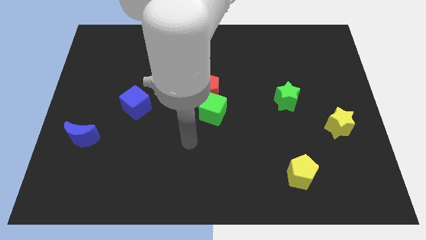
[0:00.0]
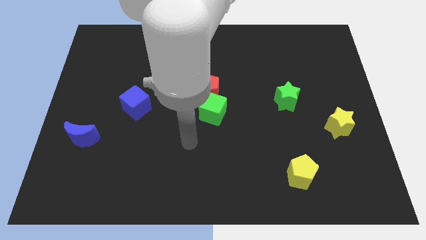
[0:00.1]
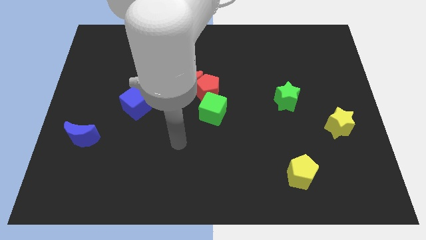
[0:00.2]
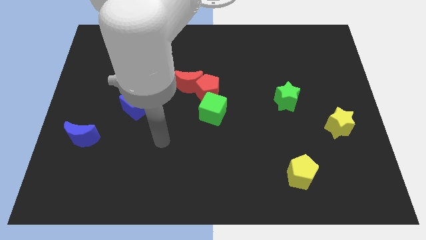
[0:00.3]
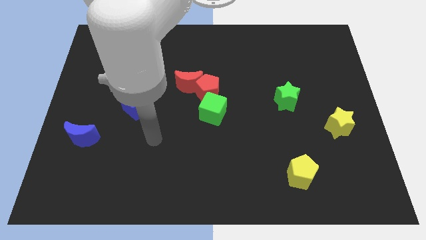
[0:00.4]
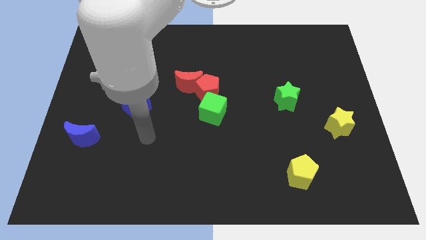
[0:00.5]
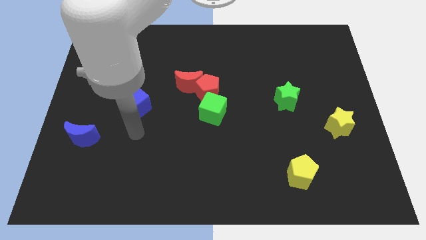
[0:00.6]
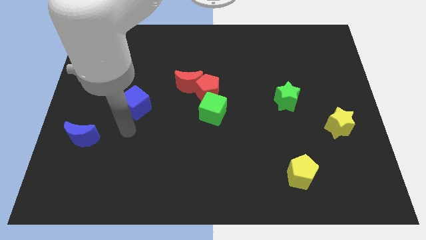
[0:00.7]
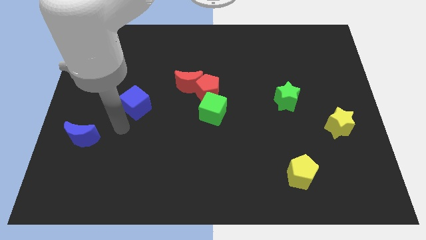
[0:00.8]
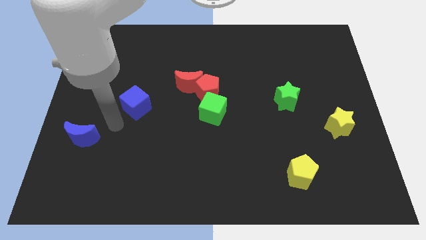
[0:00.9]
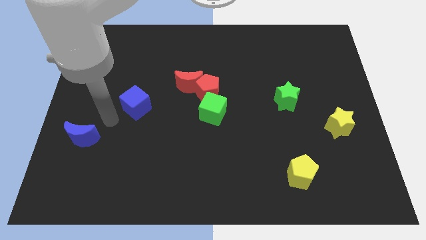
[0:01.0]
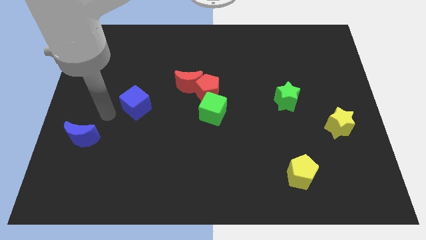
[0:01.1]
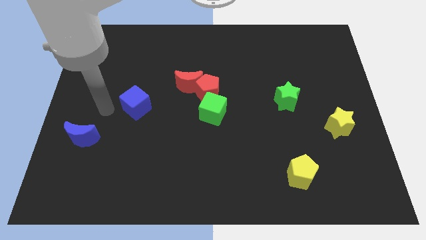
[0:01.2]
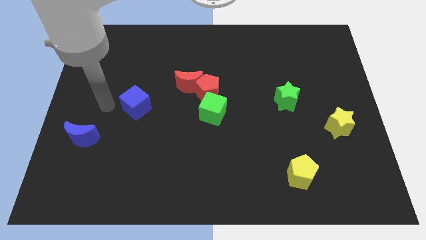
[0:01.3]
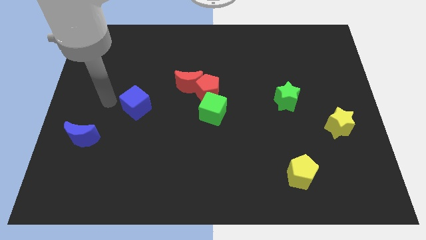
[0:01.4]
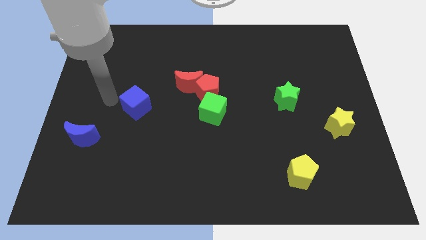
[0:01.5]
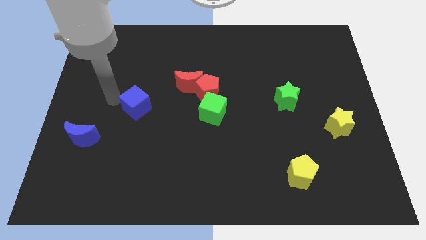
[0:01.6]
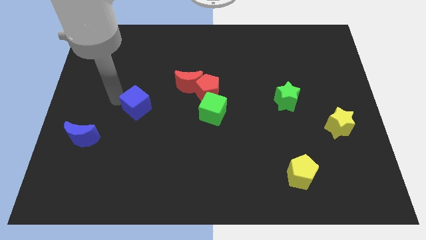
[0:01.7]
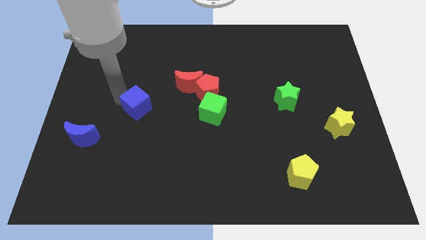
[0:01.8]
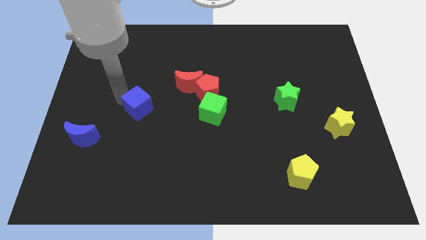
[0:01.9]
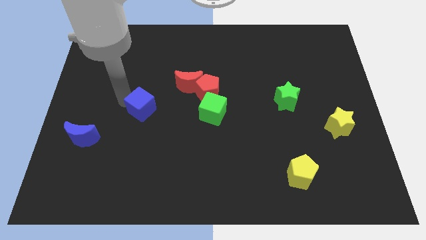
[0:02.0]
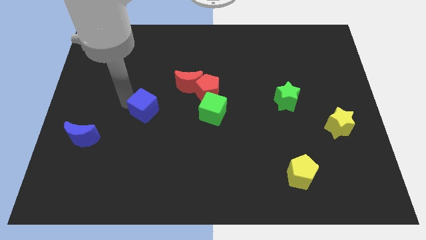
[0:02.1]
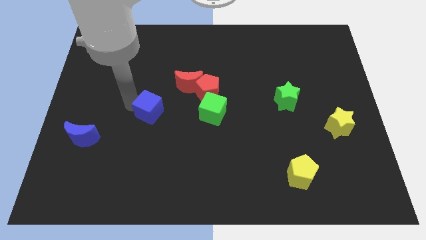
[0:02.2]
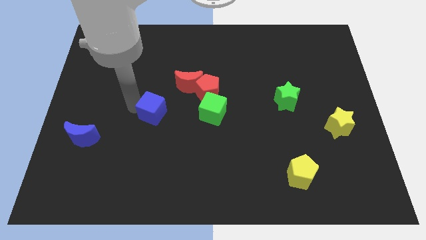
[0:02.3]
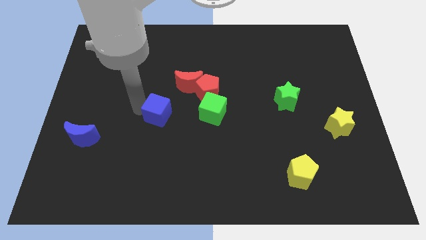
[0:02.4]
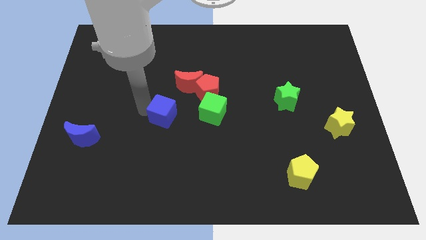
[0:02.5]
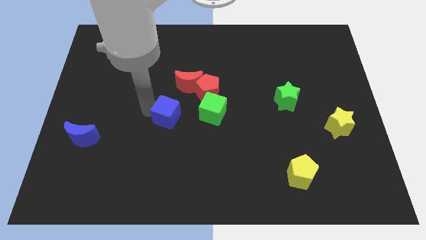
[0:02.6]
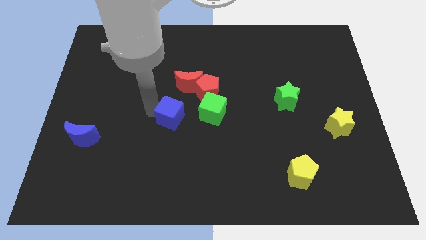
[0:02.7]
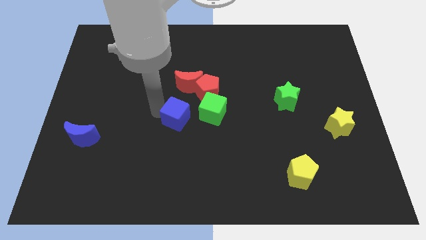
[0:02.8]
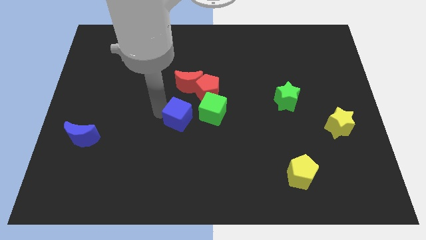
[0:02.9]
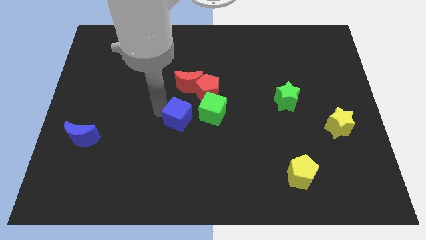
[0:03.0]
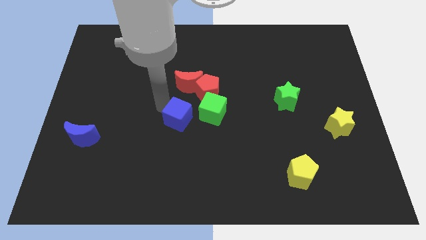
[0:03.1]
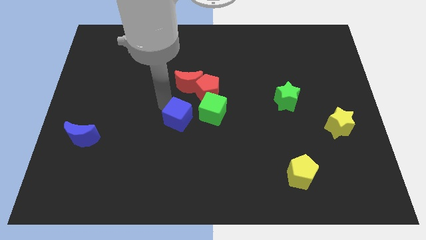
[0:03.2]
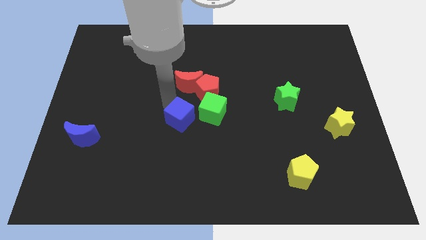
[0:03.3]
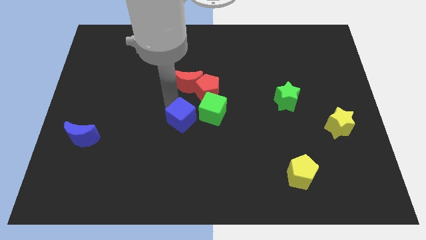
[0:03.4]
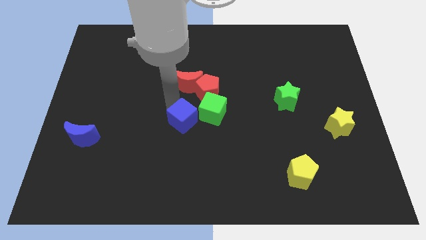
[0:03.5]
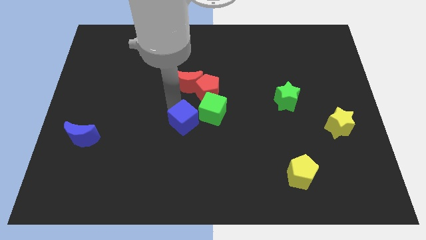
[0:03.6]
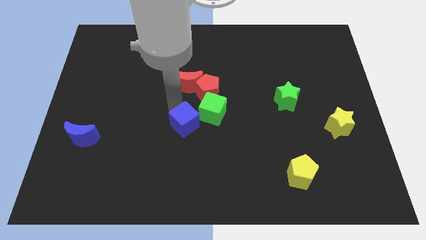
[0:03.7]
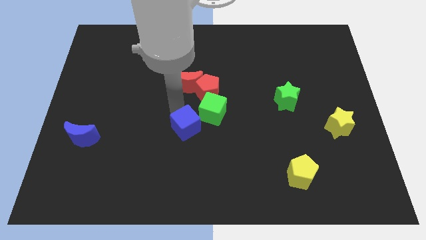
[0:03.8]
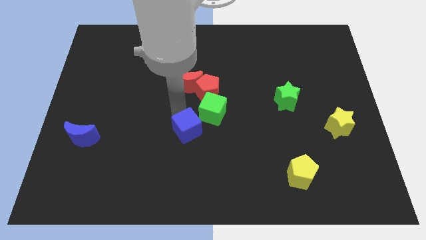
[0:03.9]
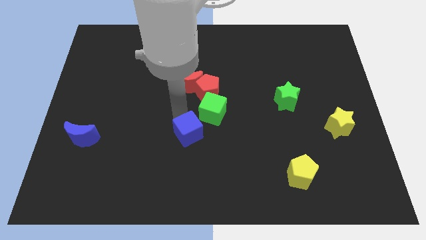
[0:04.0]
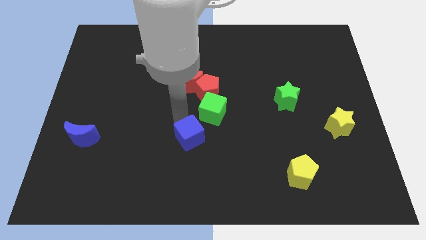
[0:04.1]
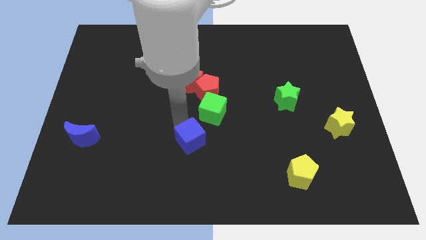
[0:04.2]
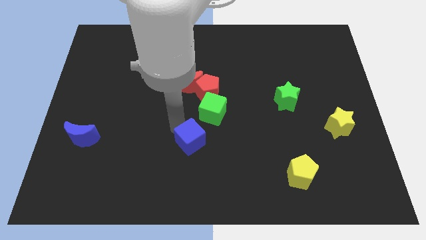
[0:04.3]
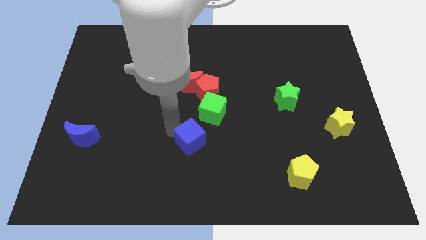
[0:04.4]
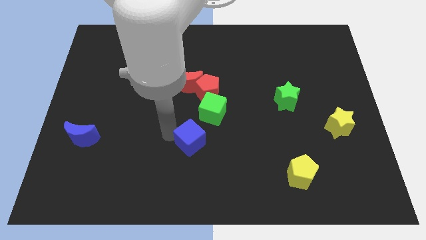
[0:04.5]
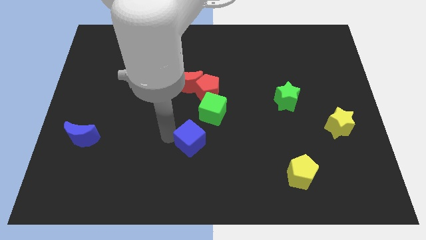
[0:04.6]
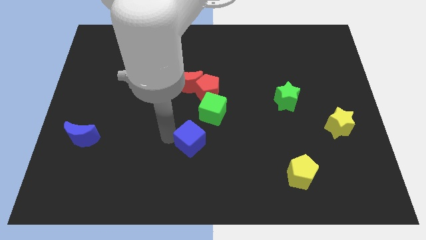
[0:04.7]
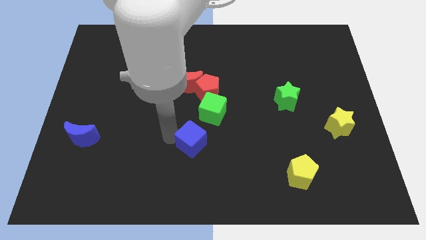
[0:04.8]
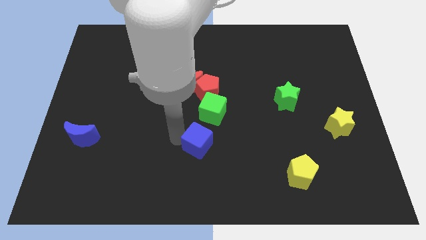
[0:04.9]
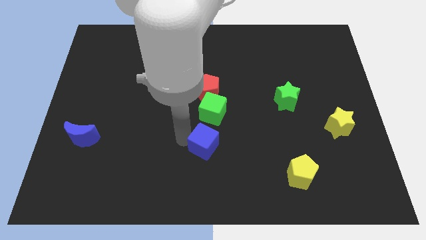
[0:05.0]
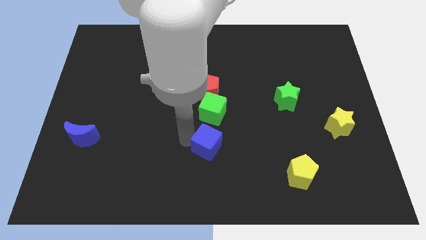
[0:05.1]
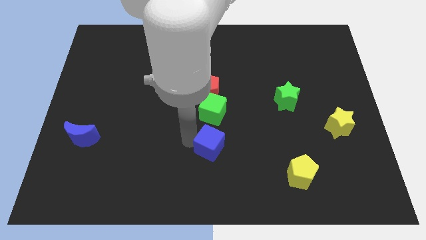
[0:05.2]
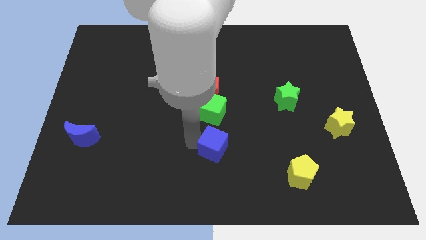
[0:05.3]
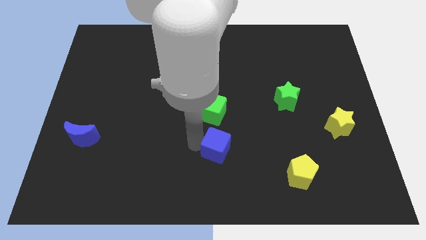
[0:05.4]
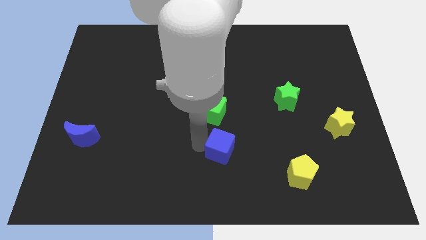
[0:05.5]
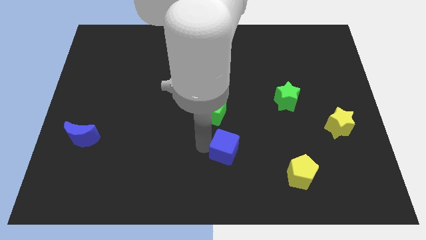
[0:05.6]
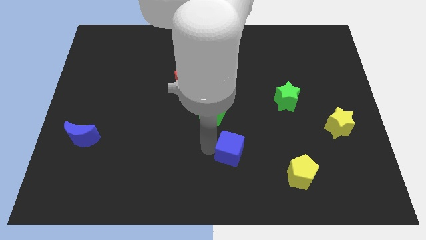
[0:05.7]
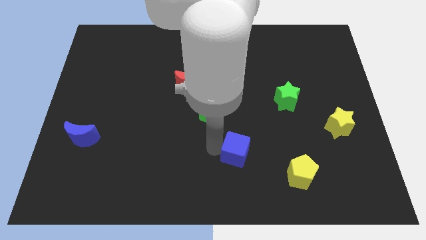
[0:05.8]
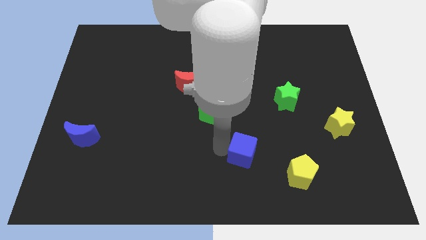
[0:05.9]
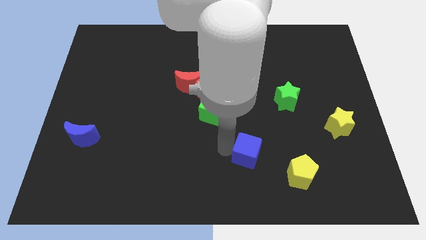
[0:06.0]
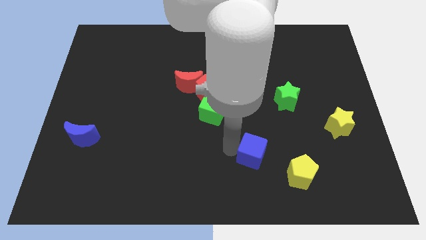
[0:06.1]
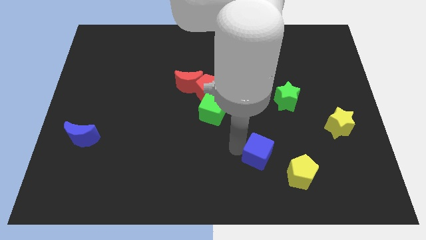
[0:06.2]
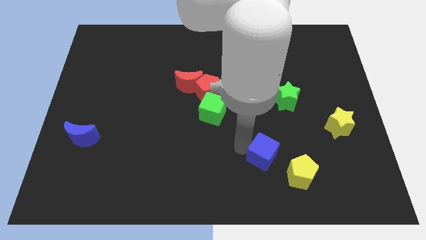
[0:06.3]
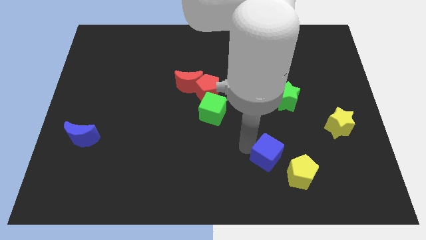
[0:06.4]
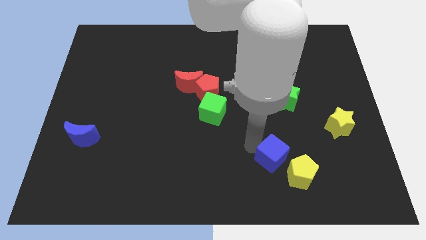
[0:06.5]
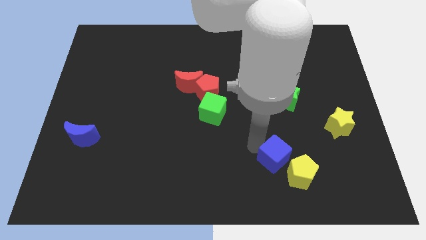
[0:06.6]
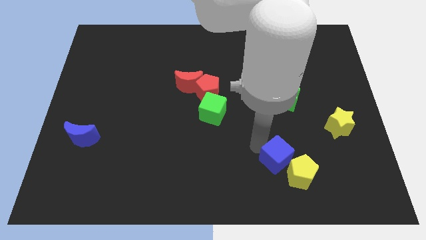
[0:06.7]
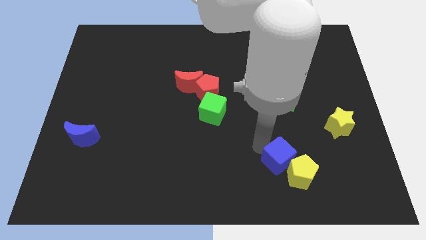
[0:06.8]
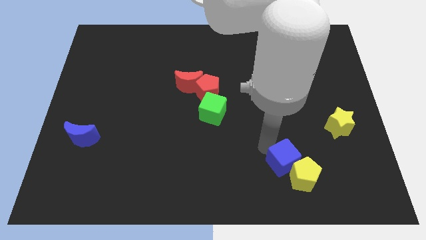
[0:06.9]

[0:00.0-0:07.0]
move the blue cube close to the yellow pentagon

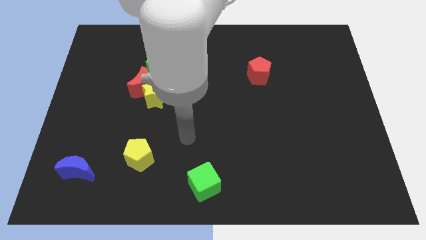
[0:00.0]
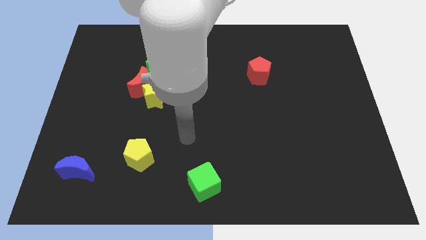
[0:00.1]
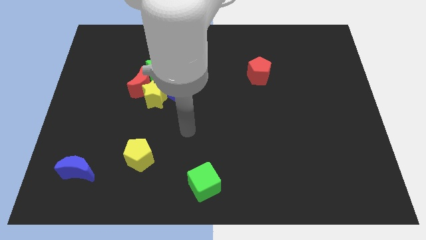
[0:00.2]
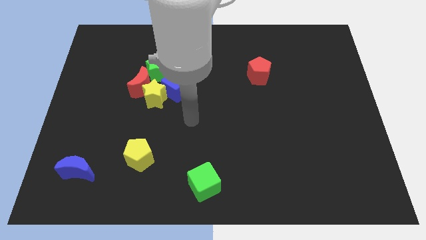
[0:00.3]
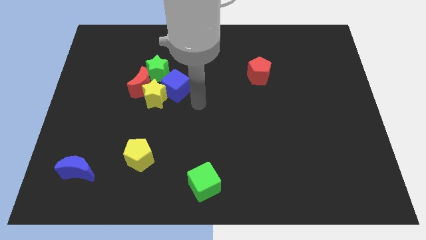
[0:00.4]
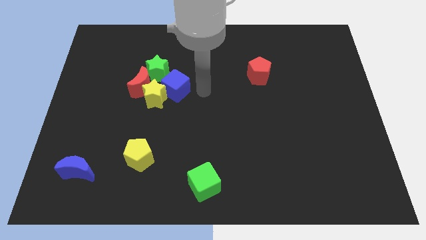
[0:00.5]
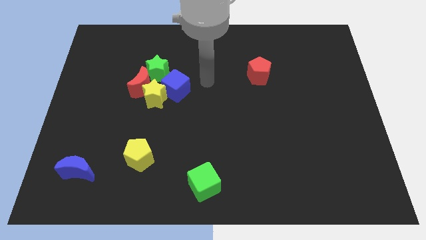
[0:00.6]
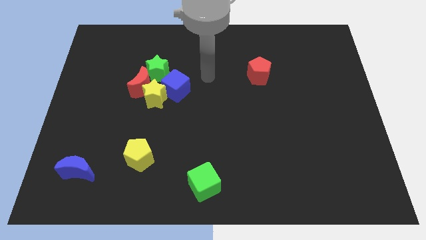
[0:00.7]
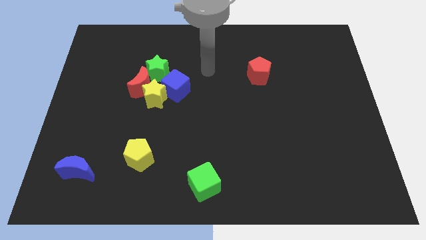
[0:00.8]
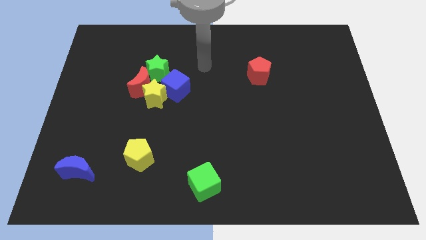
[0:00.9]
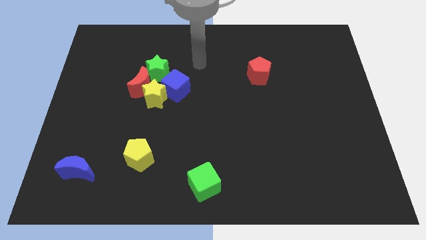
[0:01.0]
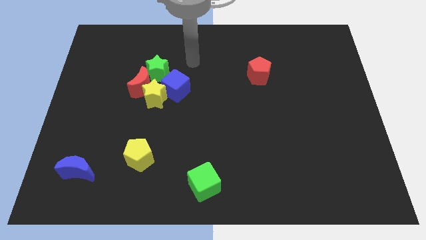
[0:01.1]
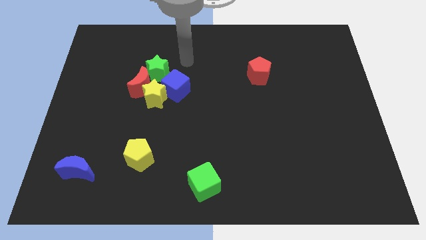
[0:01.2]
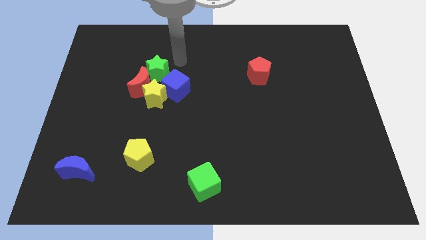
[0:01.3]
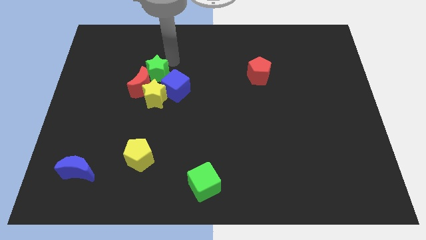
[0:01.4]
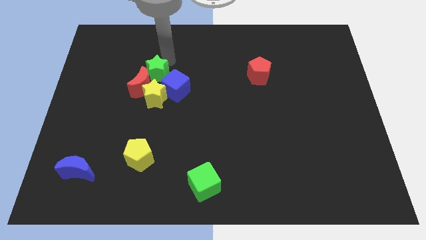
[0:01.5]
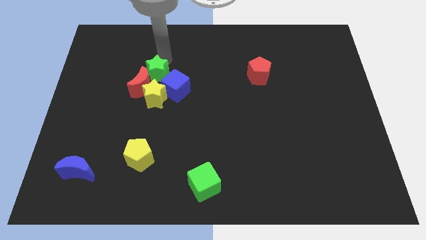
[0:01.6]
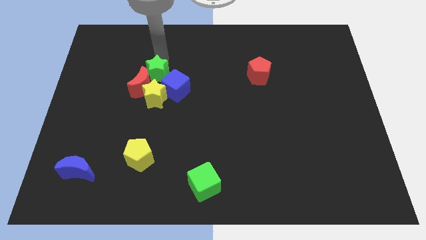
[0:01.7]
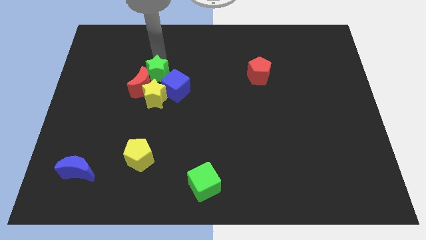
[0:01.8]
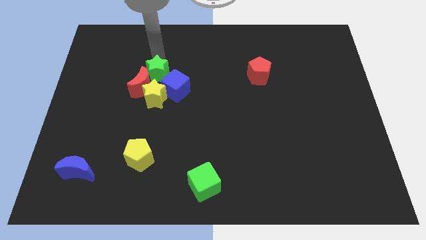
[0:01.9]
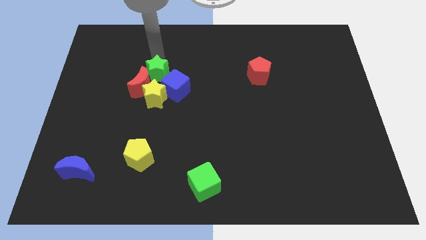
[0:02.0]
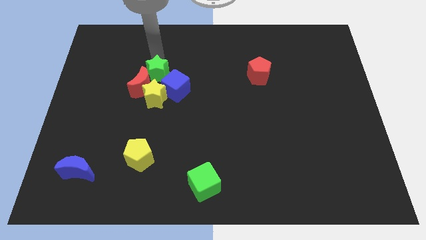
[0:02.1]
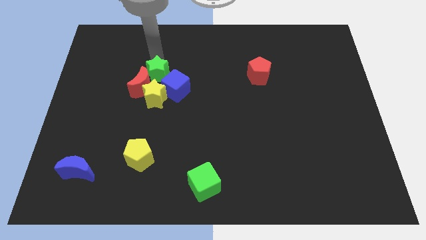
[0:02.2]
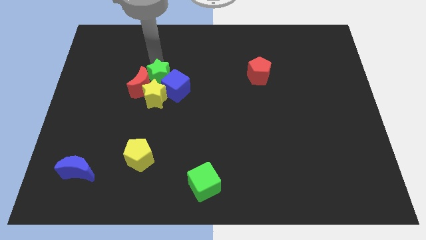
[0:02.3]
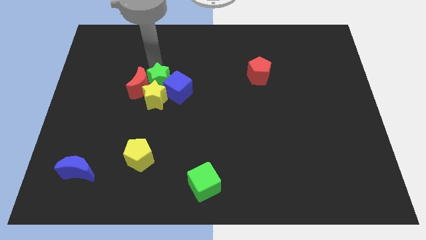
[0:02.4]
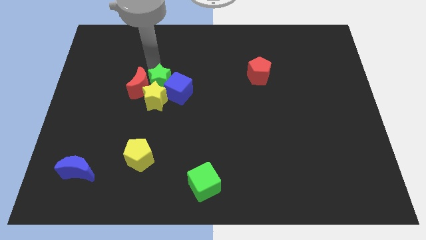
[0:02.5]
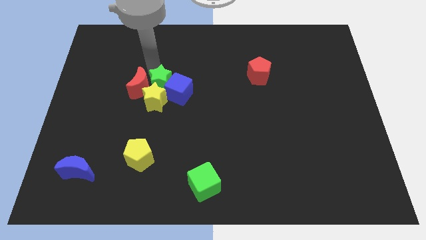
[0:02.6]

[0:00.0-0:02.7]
slide the green star towards the yellow star
